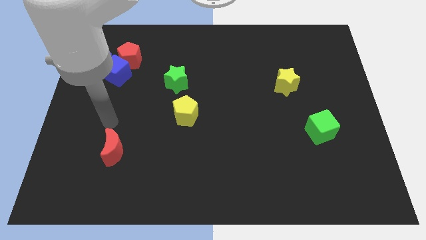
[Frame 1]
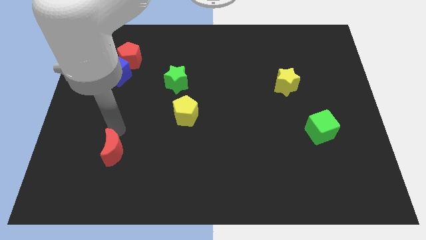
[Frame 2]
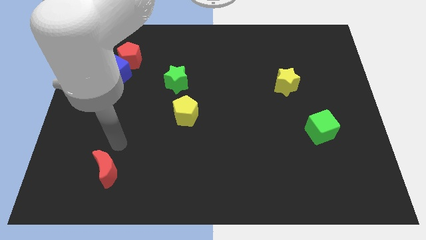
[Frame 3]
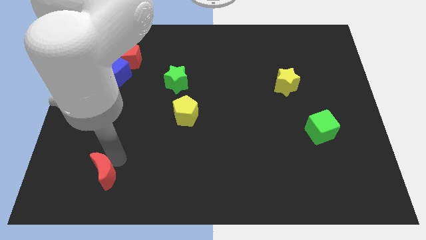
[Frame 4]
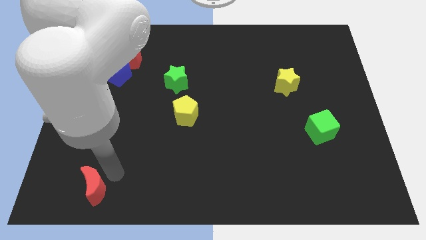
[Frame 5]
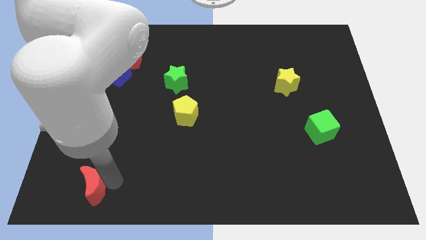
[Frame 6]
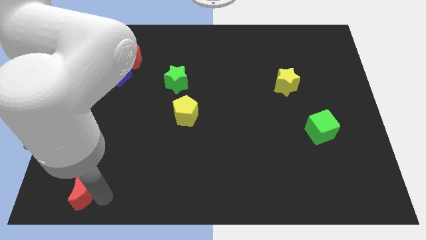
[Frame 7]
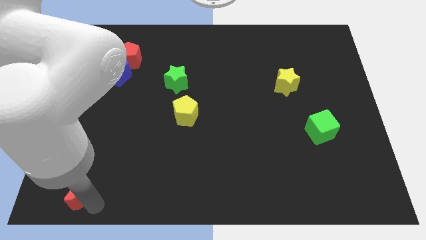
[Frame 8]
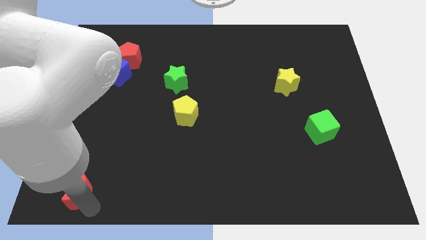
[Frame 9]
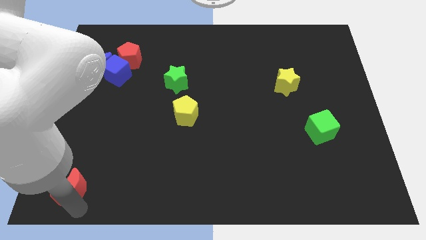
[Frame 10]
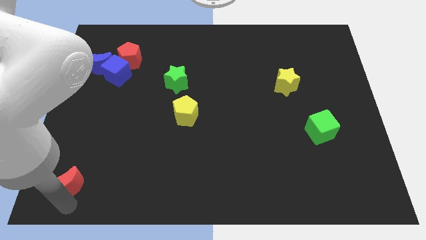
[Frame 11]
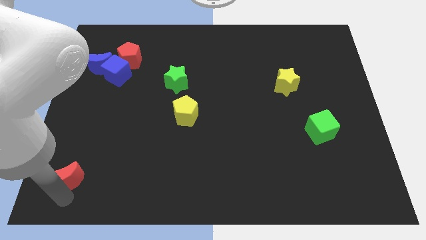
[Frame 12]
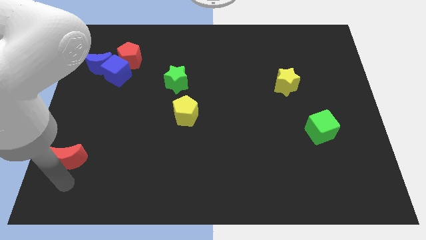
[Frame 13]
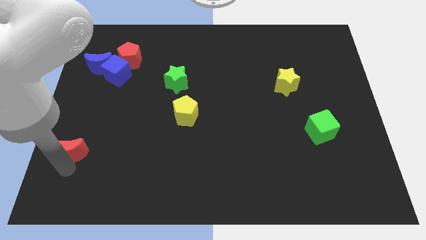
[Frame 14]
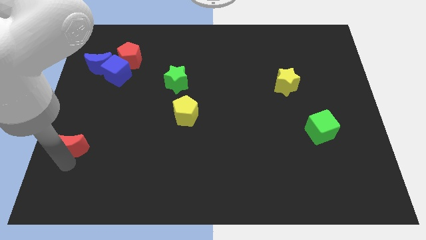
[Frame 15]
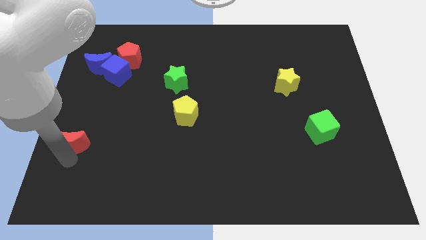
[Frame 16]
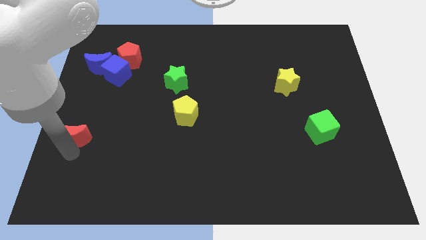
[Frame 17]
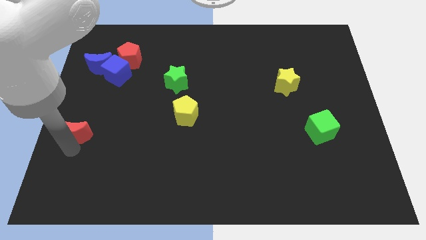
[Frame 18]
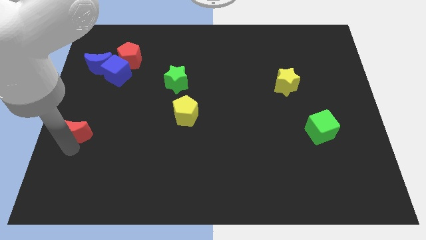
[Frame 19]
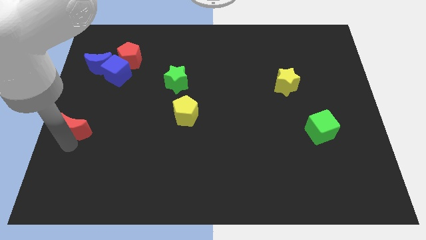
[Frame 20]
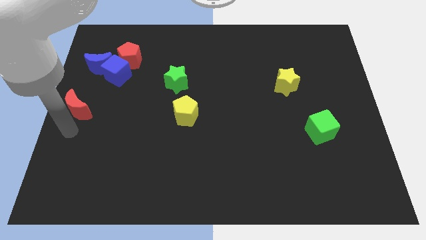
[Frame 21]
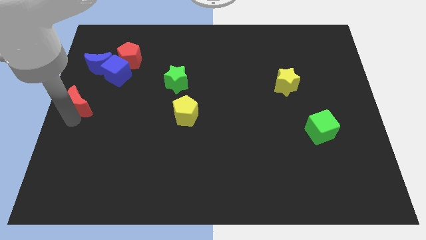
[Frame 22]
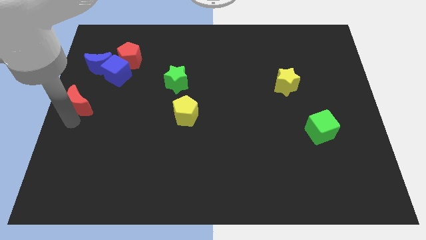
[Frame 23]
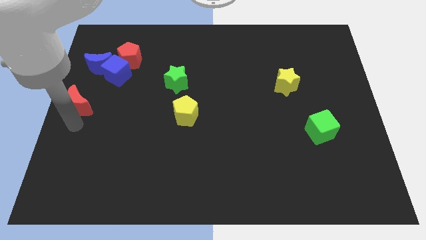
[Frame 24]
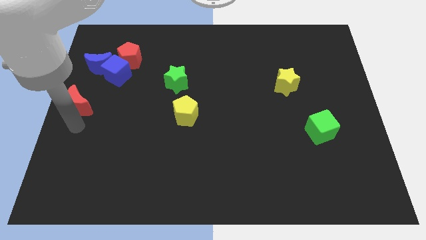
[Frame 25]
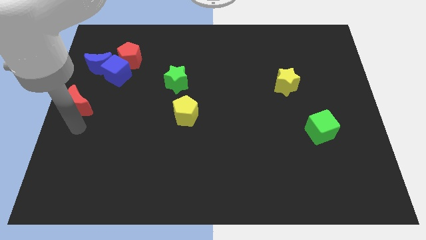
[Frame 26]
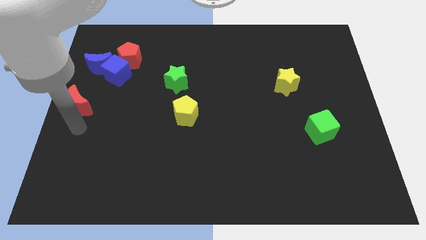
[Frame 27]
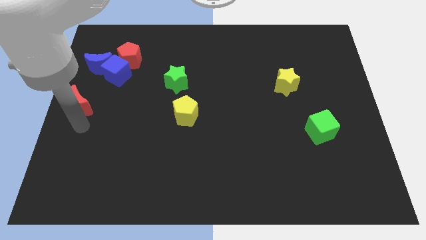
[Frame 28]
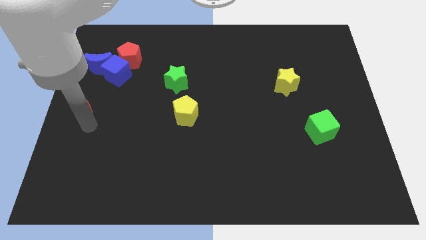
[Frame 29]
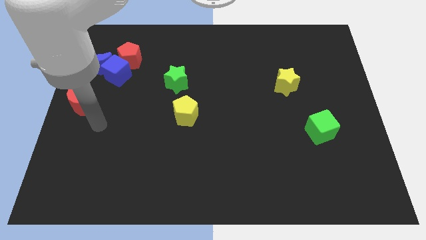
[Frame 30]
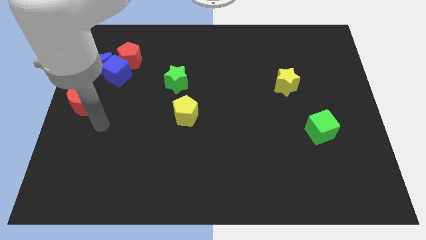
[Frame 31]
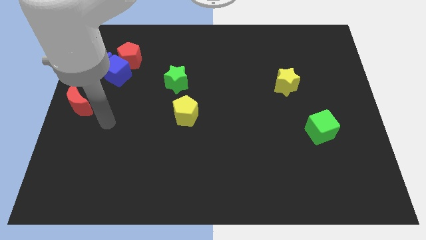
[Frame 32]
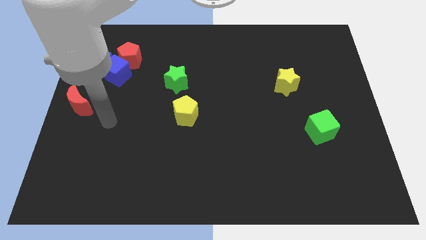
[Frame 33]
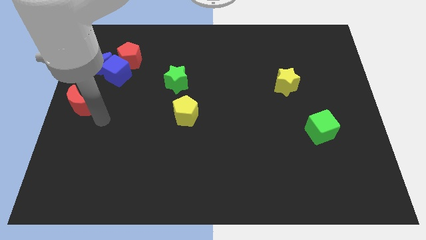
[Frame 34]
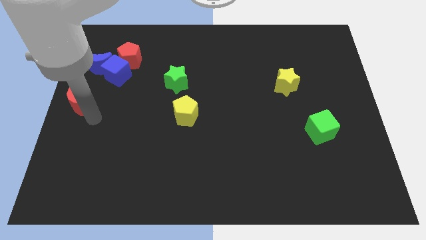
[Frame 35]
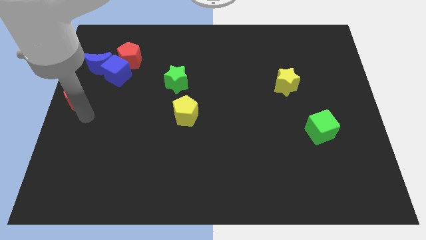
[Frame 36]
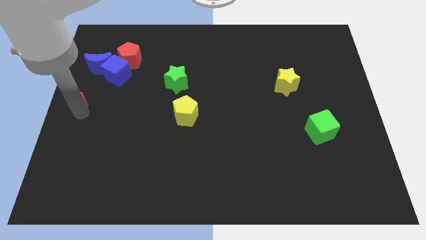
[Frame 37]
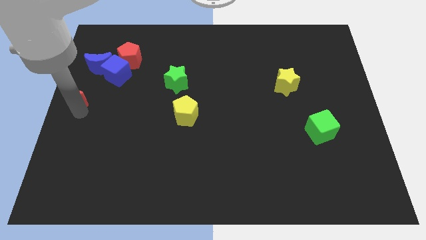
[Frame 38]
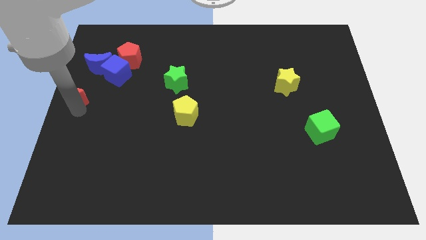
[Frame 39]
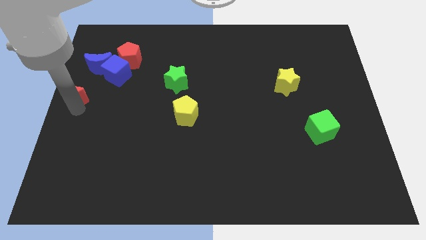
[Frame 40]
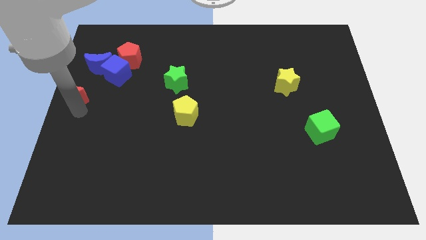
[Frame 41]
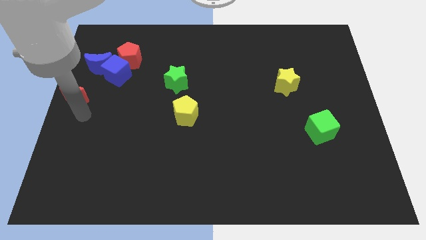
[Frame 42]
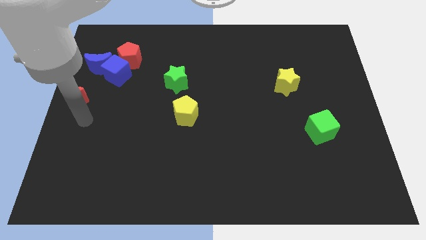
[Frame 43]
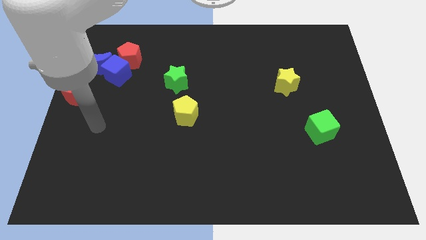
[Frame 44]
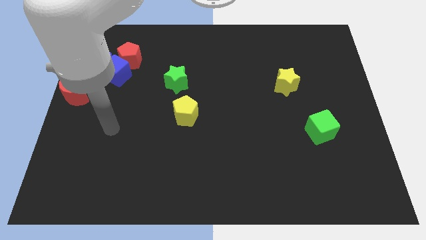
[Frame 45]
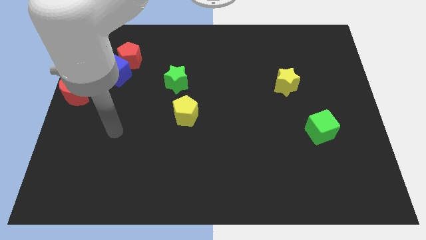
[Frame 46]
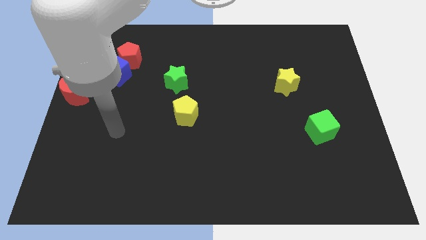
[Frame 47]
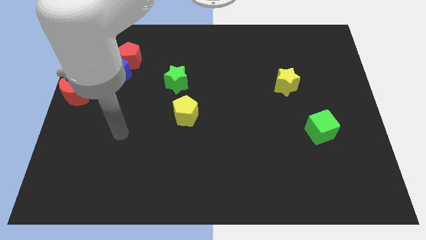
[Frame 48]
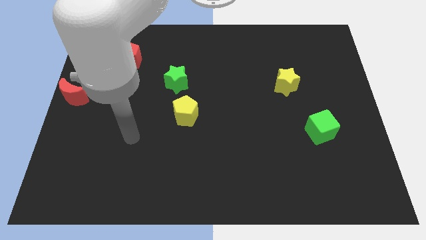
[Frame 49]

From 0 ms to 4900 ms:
move red moon to the bottom left of the blue moon

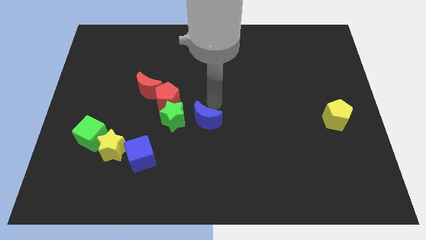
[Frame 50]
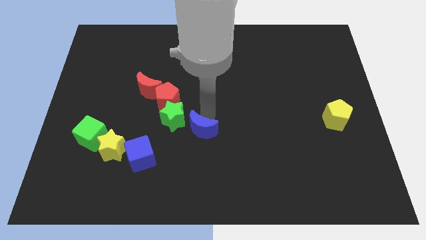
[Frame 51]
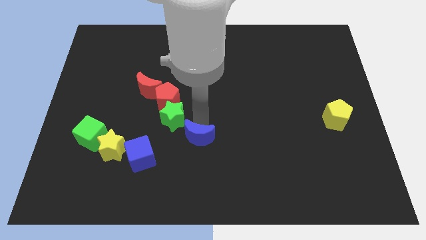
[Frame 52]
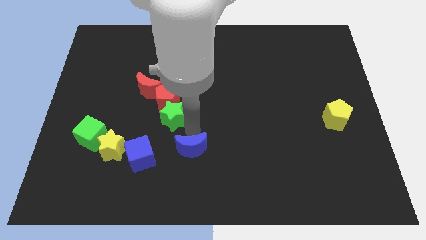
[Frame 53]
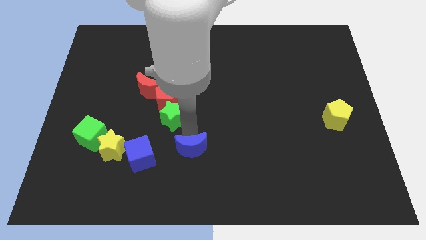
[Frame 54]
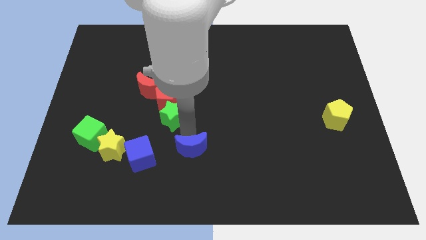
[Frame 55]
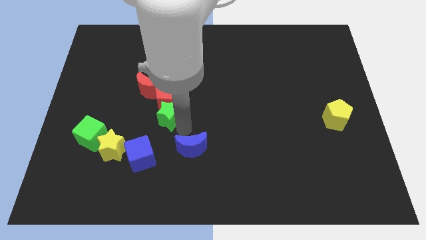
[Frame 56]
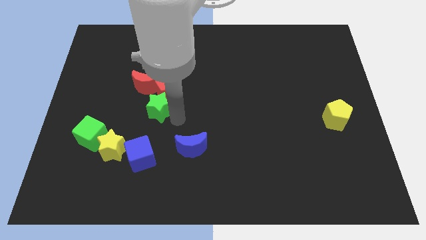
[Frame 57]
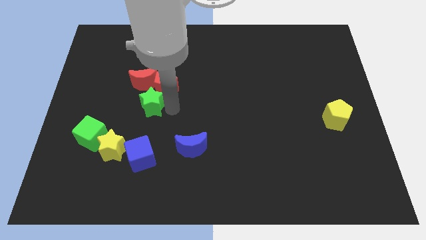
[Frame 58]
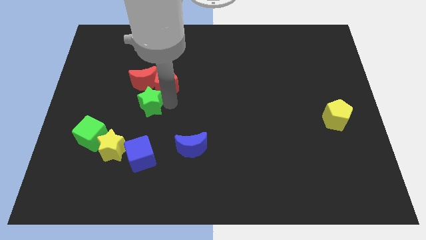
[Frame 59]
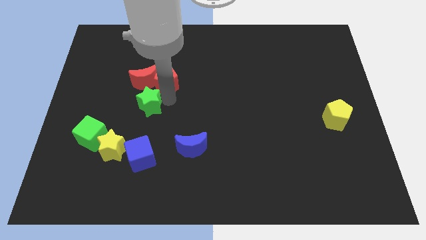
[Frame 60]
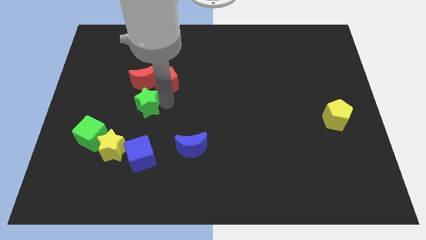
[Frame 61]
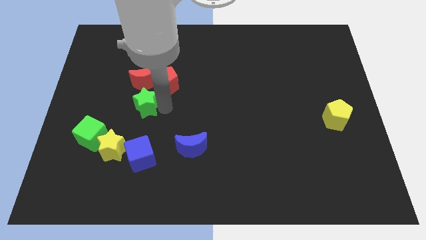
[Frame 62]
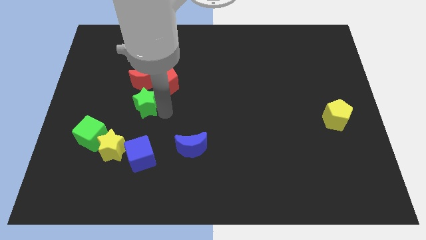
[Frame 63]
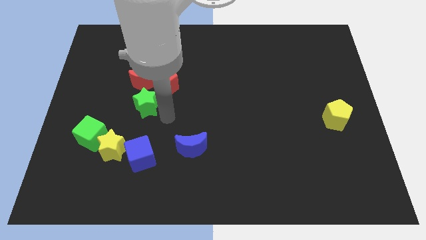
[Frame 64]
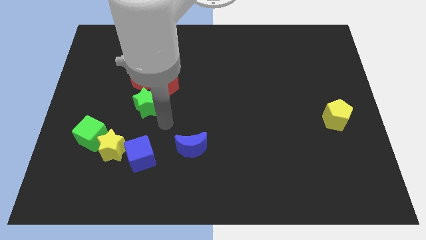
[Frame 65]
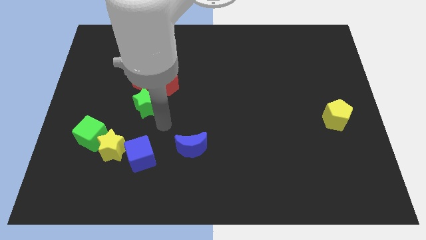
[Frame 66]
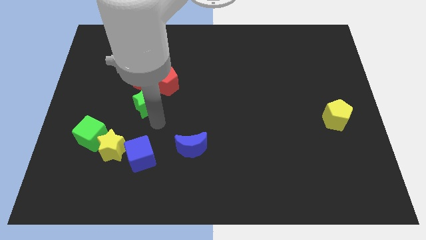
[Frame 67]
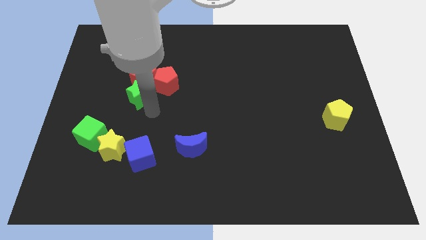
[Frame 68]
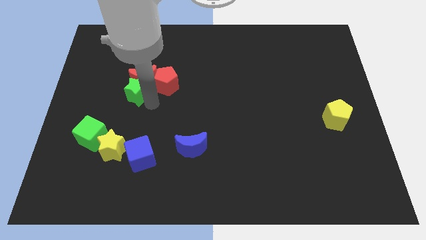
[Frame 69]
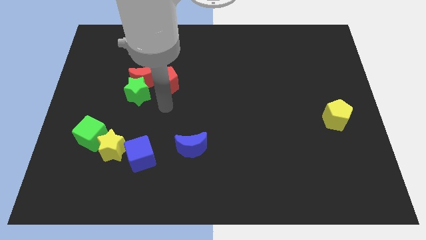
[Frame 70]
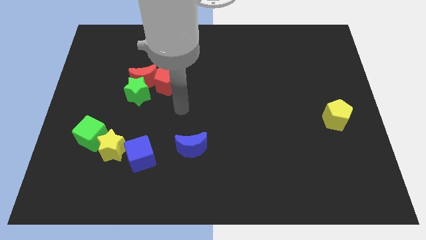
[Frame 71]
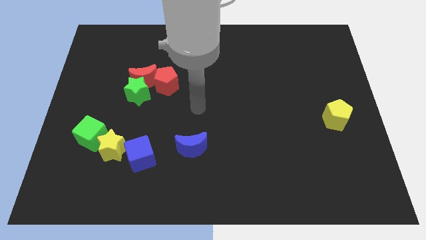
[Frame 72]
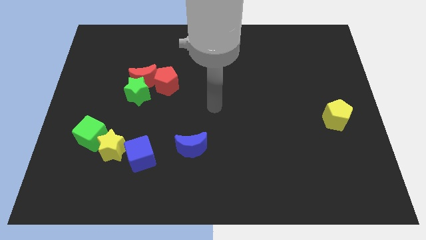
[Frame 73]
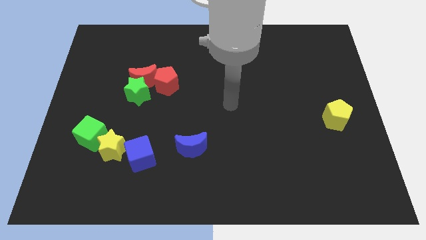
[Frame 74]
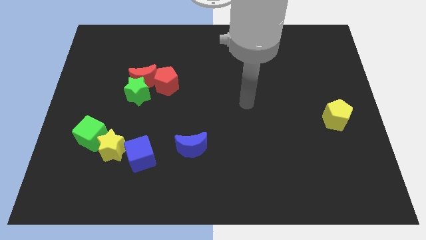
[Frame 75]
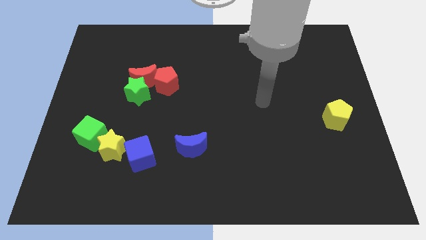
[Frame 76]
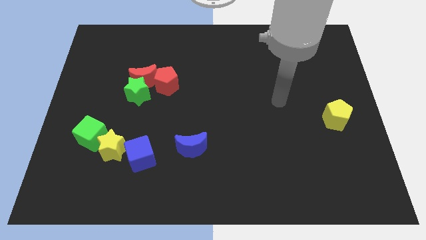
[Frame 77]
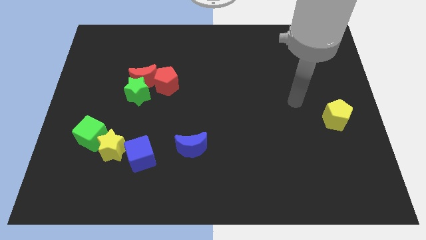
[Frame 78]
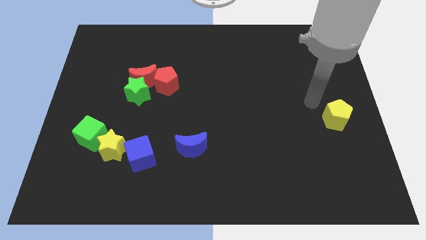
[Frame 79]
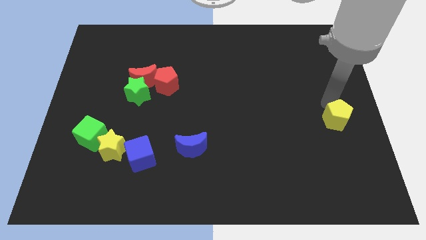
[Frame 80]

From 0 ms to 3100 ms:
push the green star into the red moon

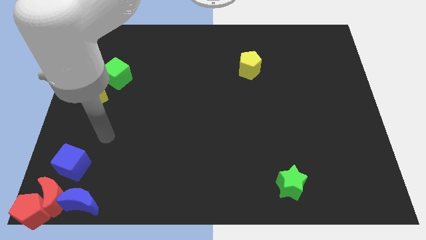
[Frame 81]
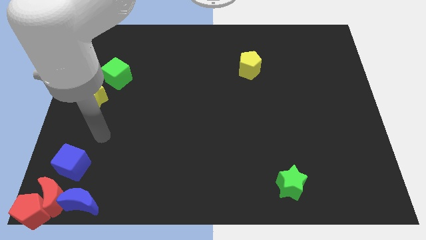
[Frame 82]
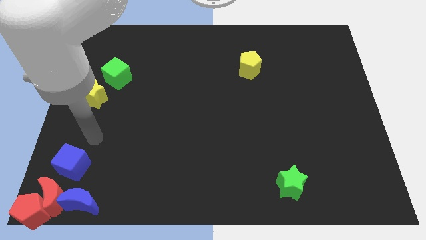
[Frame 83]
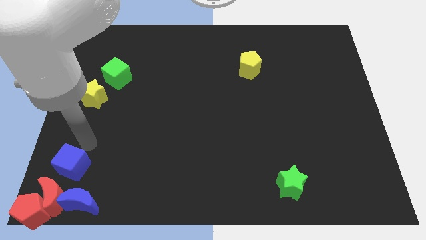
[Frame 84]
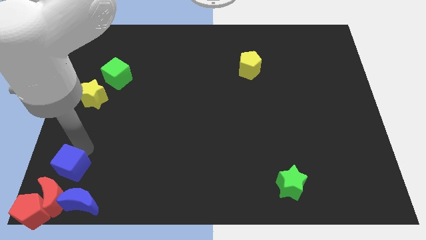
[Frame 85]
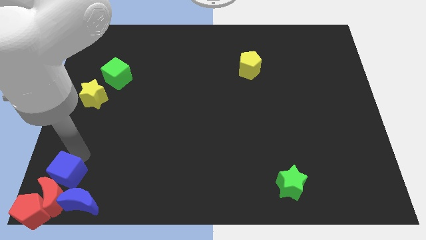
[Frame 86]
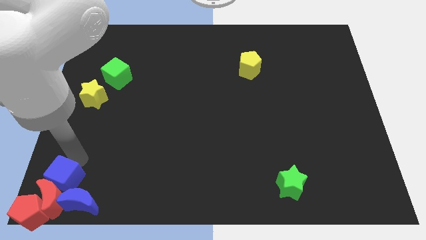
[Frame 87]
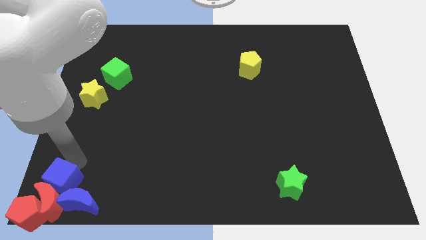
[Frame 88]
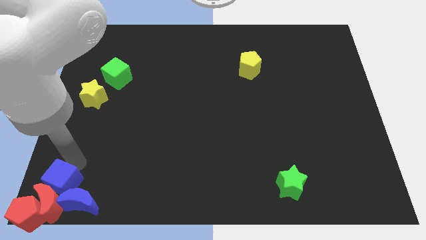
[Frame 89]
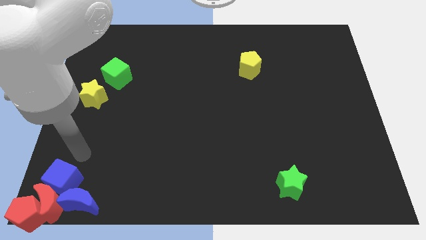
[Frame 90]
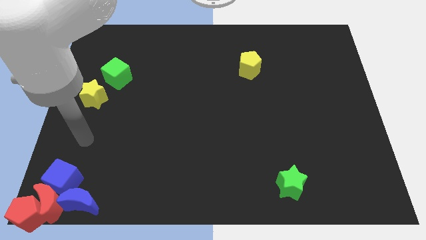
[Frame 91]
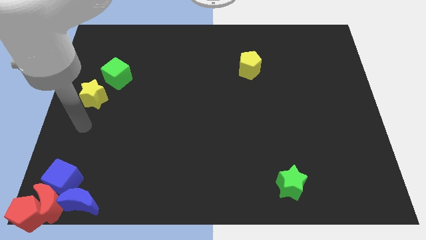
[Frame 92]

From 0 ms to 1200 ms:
move the blue cube into the red crescent
